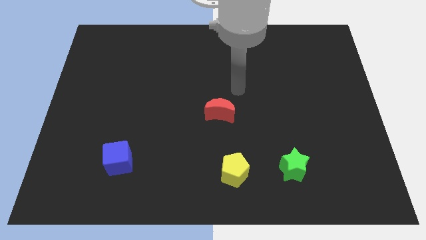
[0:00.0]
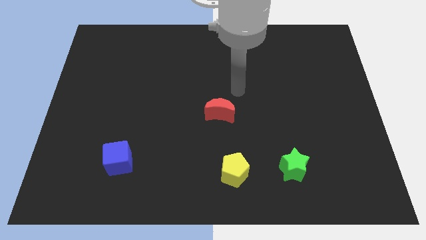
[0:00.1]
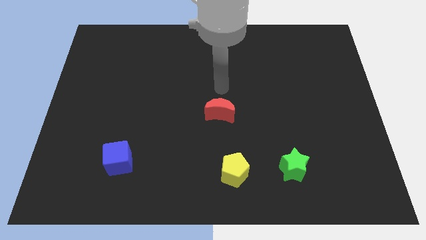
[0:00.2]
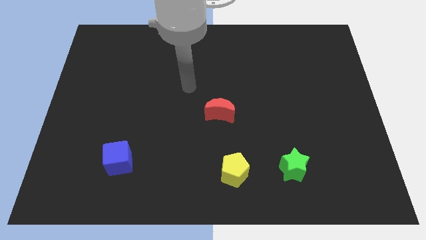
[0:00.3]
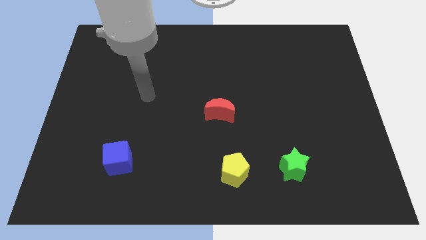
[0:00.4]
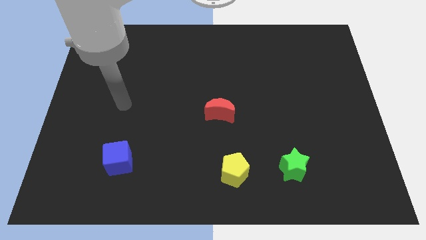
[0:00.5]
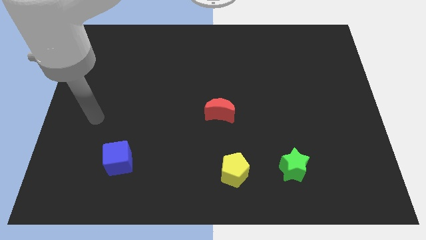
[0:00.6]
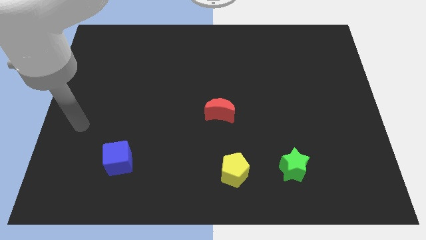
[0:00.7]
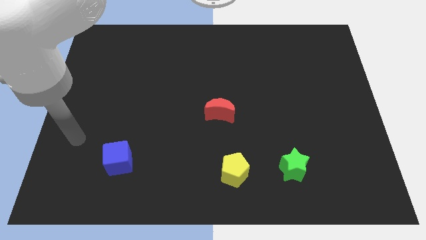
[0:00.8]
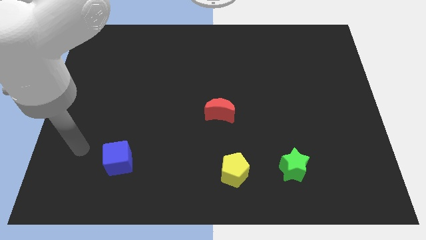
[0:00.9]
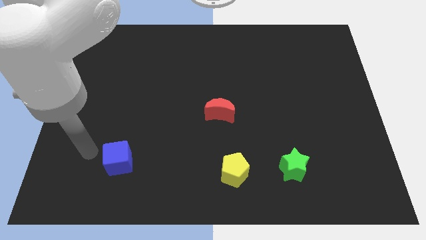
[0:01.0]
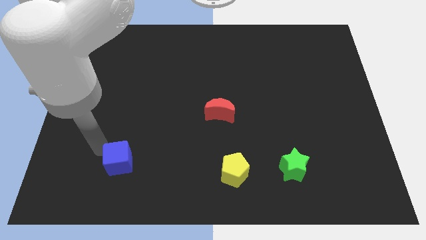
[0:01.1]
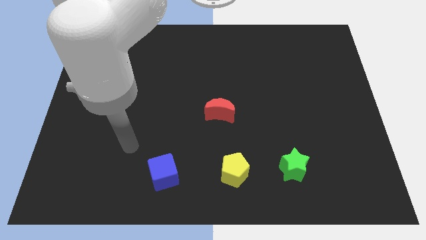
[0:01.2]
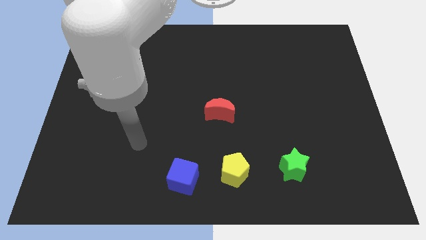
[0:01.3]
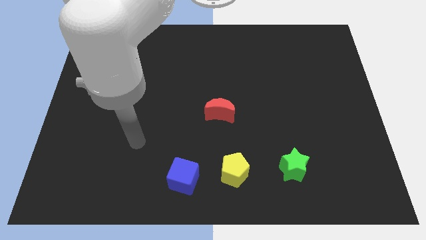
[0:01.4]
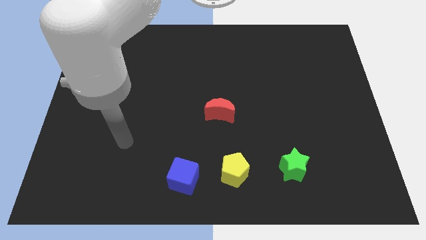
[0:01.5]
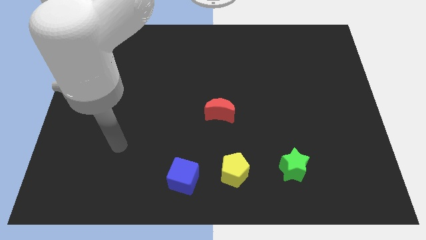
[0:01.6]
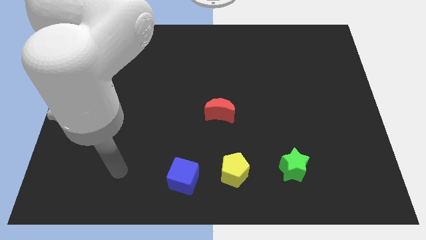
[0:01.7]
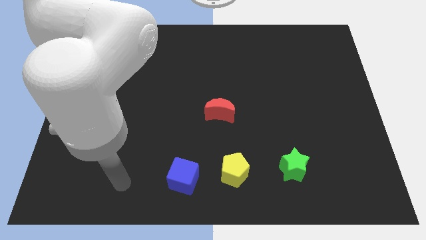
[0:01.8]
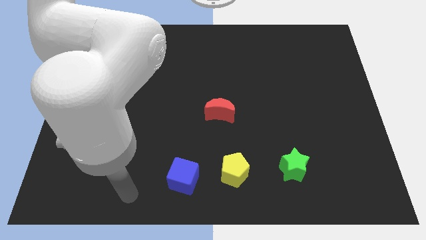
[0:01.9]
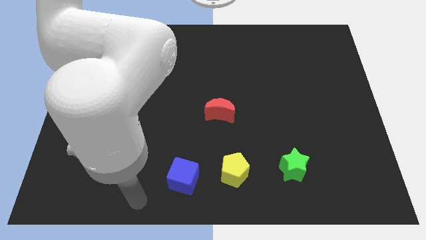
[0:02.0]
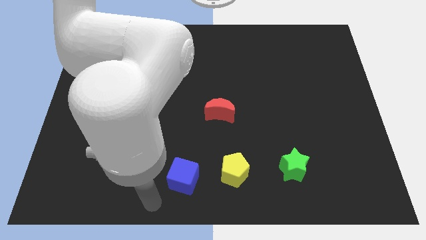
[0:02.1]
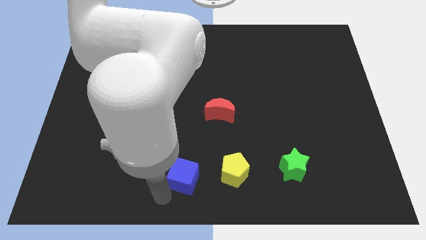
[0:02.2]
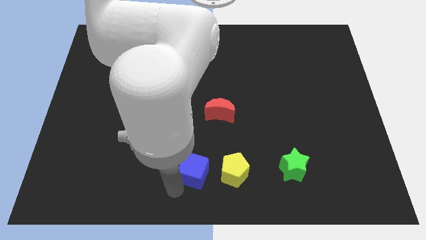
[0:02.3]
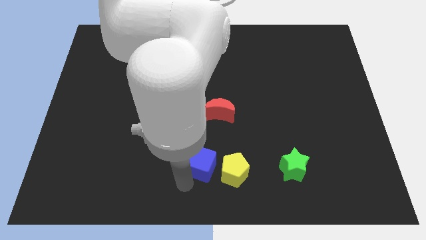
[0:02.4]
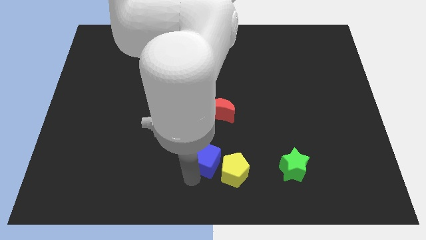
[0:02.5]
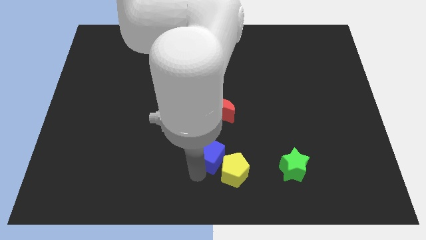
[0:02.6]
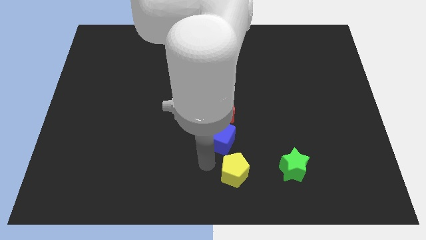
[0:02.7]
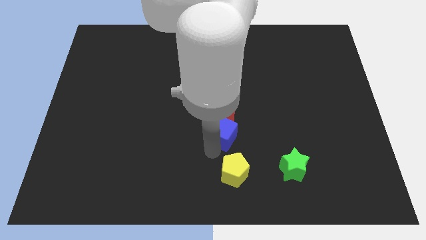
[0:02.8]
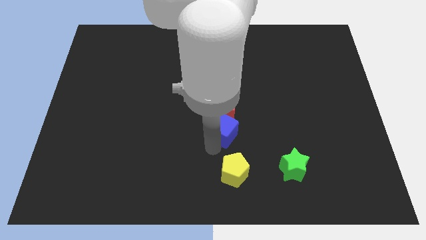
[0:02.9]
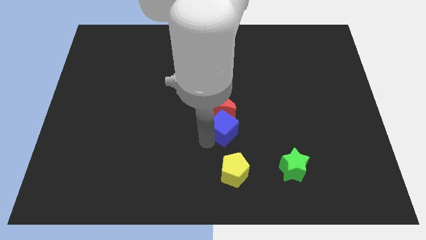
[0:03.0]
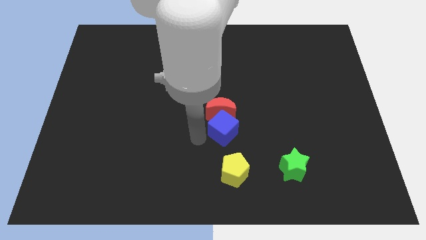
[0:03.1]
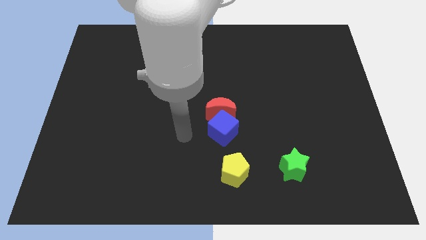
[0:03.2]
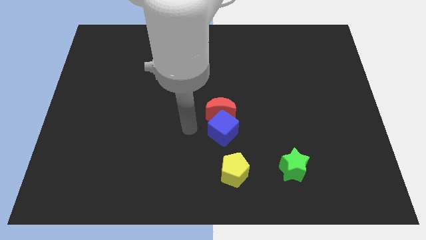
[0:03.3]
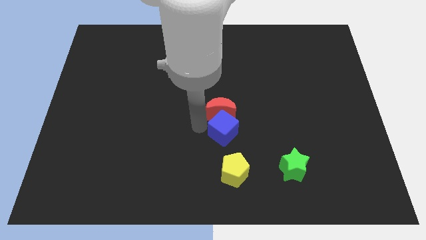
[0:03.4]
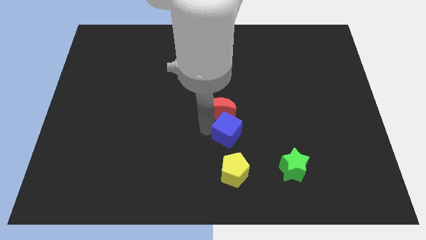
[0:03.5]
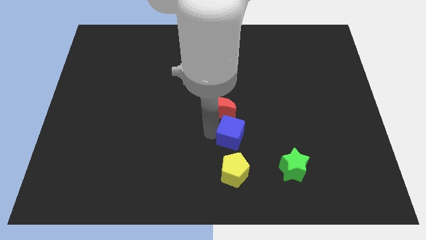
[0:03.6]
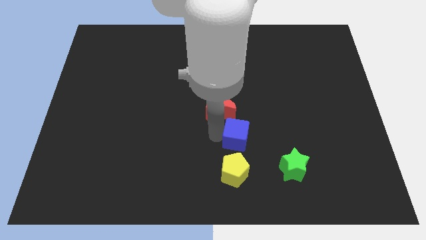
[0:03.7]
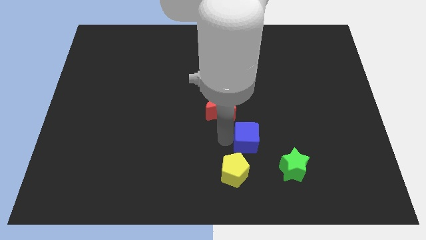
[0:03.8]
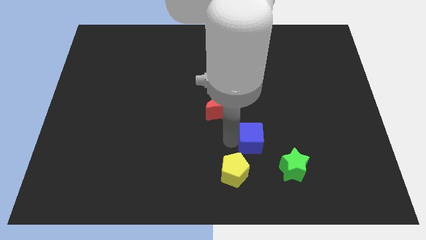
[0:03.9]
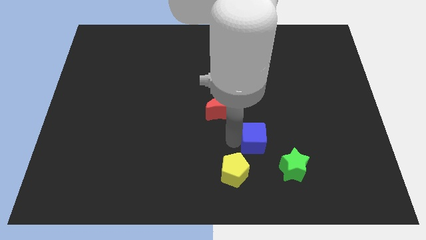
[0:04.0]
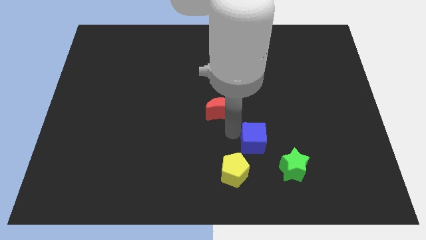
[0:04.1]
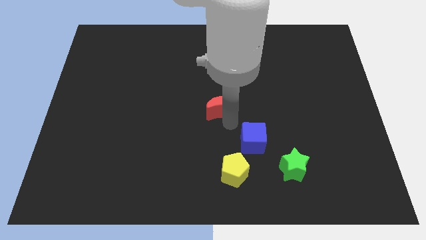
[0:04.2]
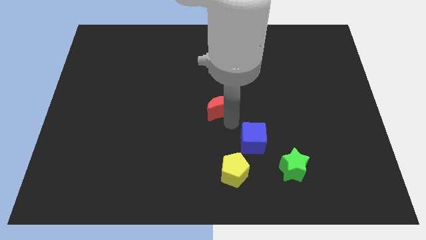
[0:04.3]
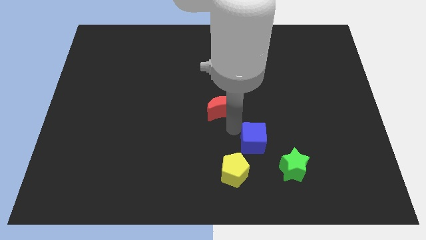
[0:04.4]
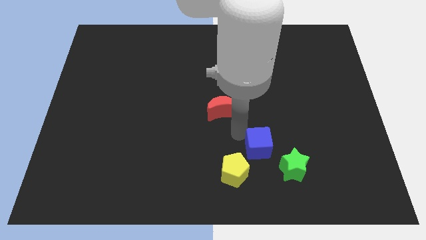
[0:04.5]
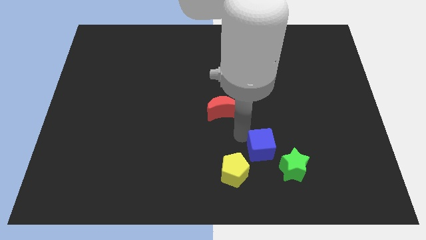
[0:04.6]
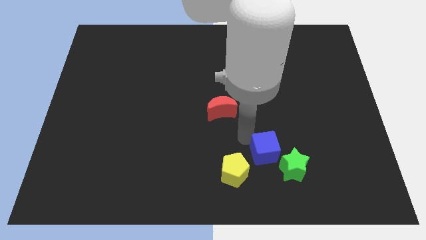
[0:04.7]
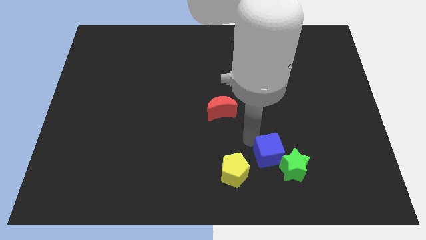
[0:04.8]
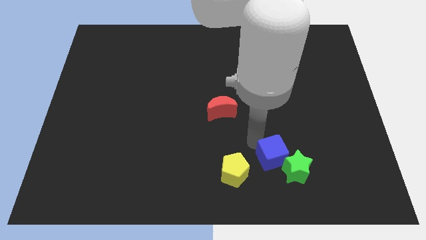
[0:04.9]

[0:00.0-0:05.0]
slide the blue cube close to the green block

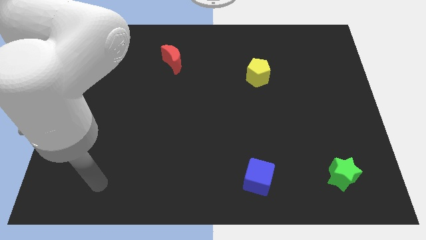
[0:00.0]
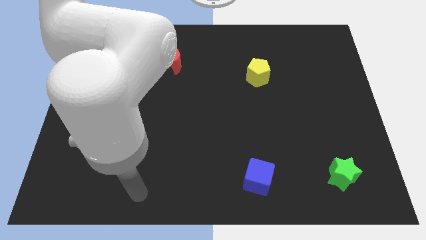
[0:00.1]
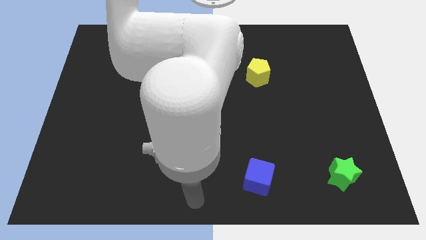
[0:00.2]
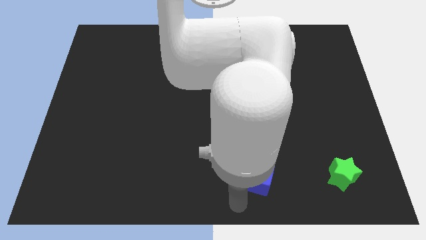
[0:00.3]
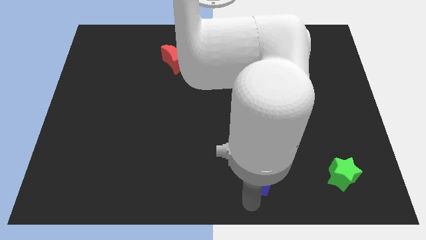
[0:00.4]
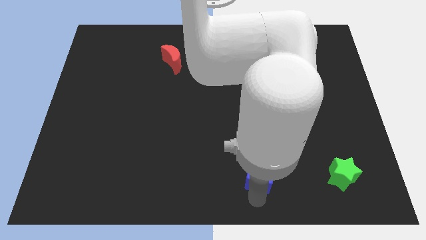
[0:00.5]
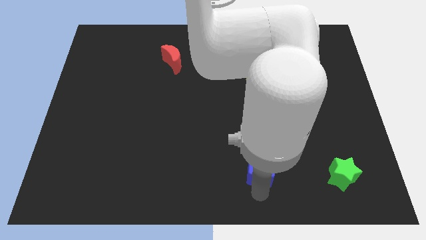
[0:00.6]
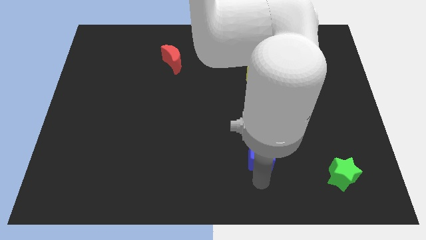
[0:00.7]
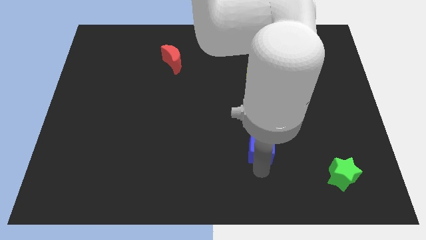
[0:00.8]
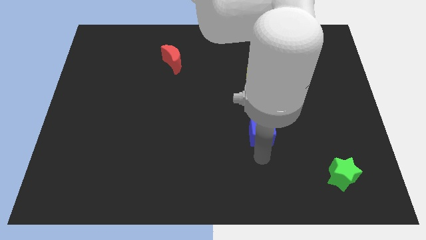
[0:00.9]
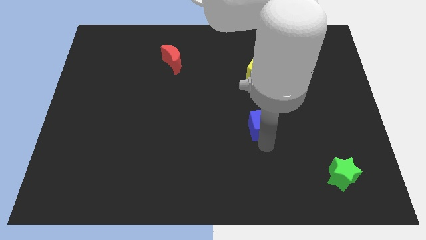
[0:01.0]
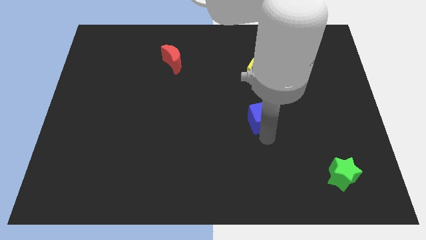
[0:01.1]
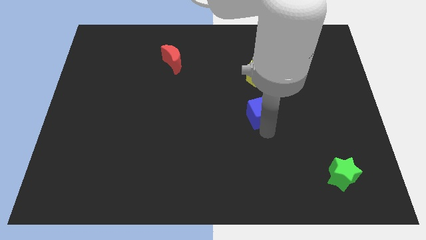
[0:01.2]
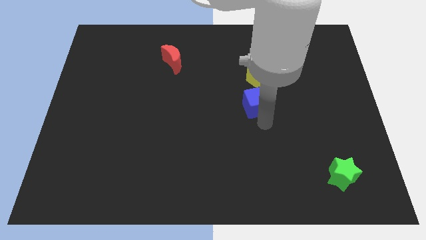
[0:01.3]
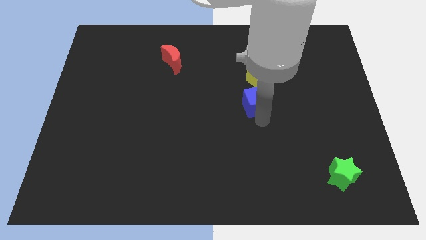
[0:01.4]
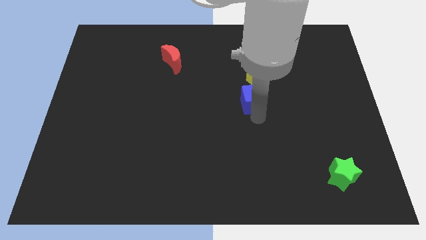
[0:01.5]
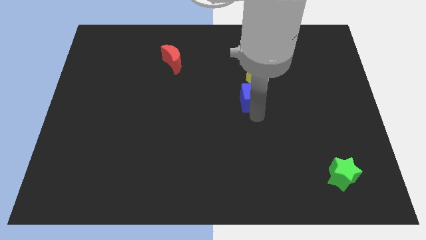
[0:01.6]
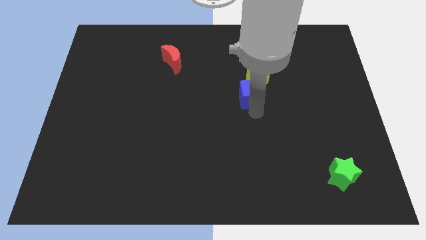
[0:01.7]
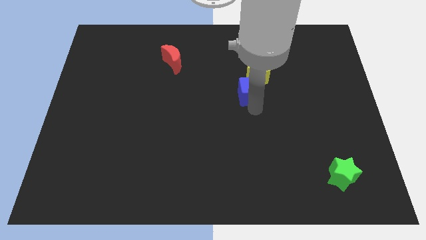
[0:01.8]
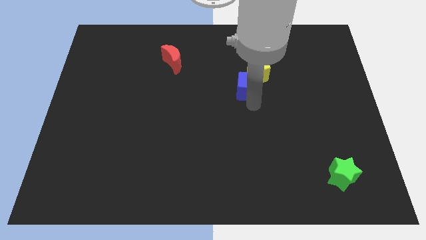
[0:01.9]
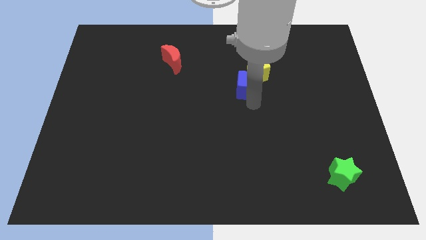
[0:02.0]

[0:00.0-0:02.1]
slide the blue cube next to the pentagon

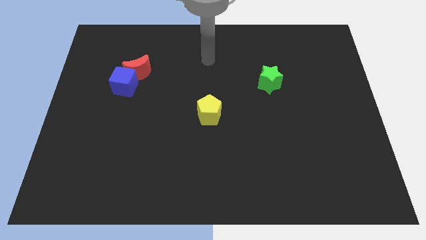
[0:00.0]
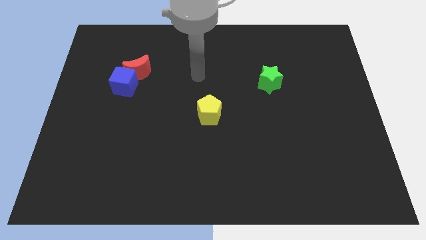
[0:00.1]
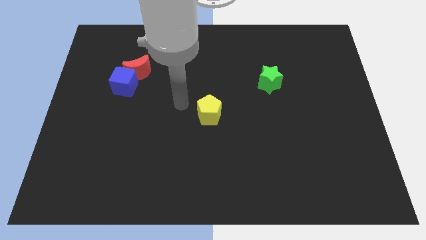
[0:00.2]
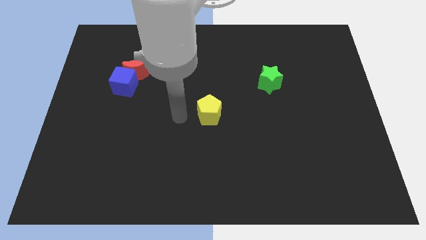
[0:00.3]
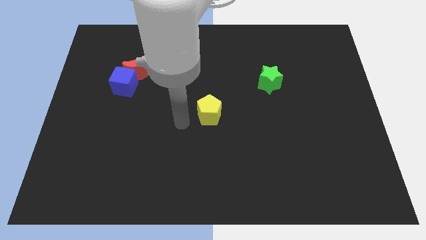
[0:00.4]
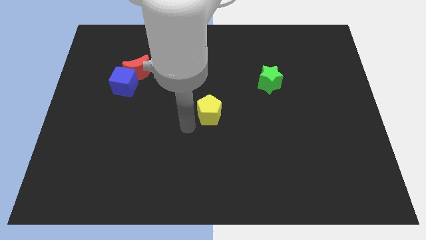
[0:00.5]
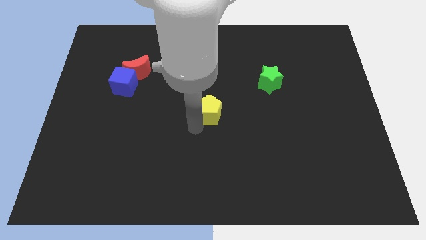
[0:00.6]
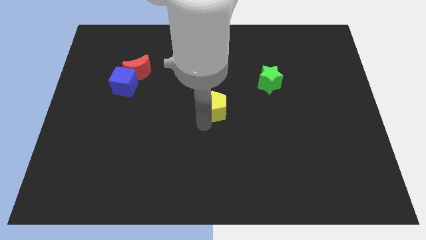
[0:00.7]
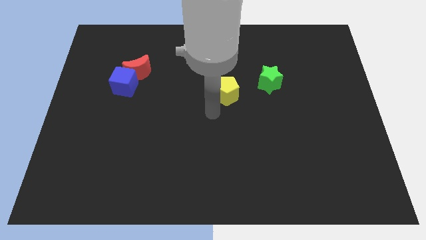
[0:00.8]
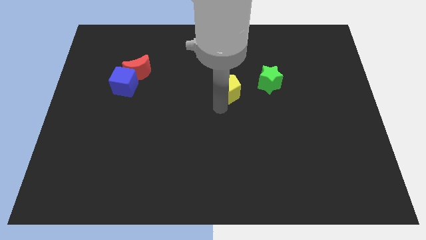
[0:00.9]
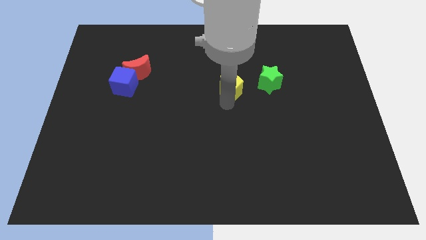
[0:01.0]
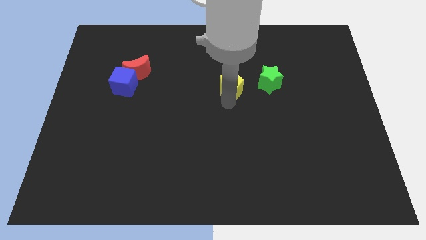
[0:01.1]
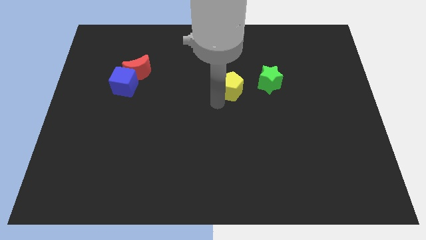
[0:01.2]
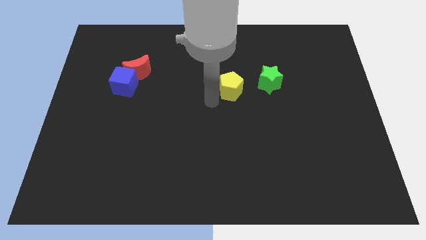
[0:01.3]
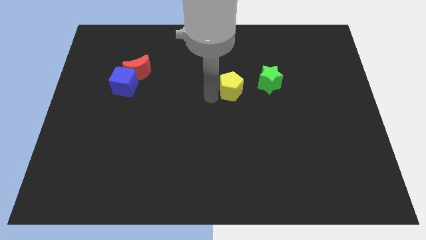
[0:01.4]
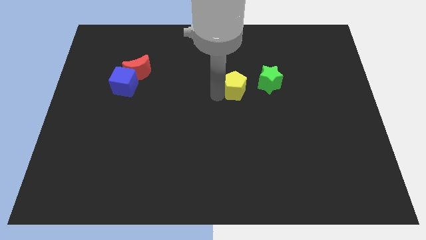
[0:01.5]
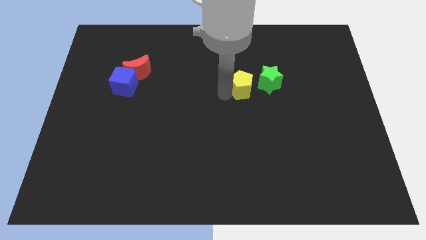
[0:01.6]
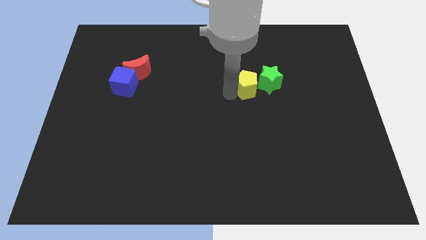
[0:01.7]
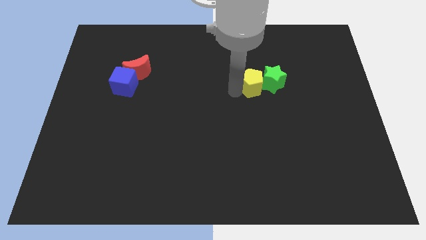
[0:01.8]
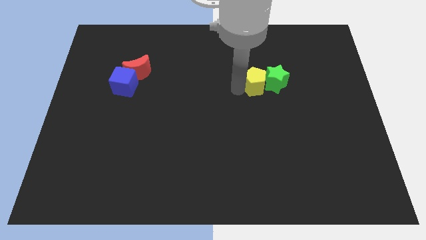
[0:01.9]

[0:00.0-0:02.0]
push the yellow pentagon next to the green block
